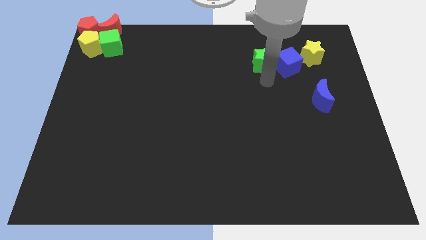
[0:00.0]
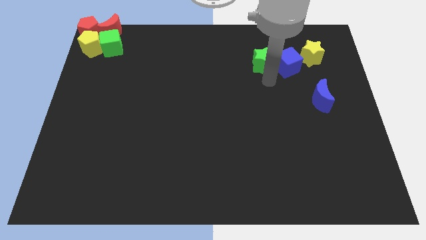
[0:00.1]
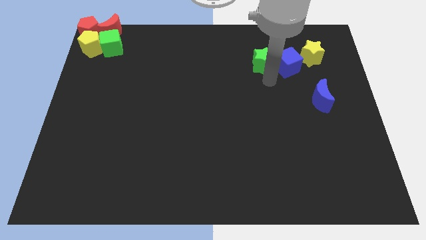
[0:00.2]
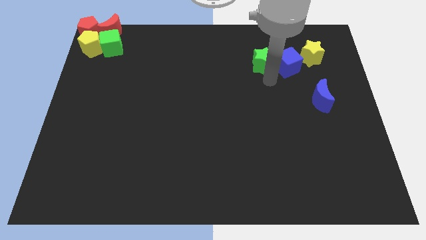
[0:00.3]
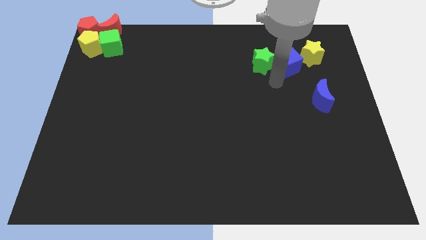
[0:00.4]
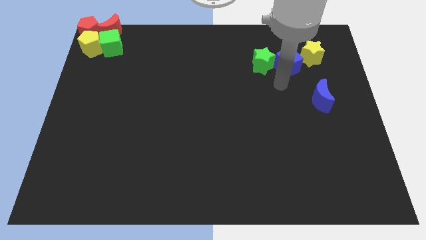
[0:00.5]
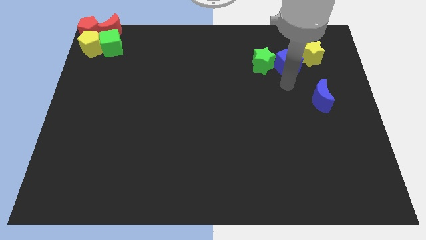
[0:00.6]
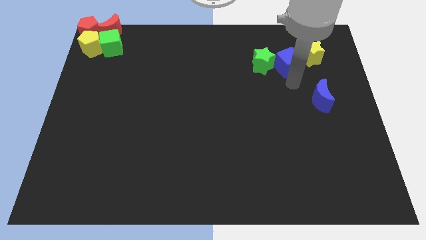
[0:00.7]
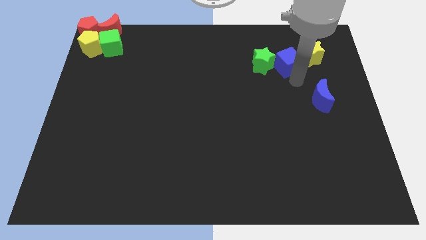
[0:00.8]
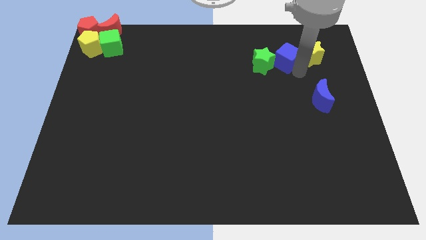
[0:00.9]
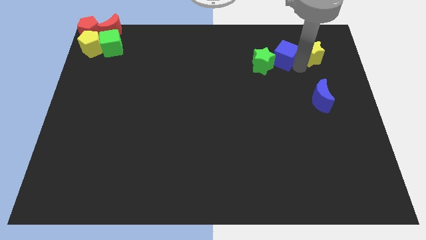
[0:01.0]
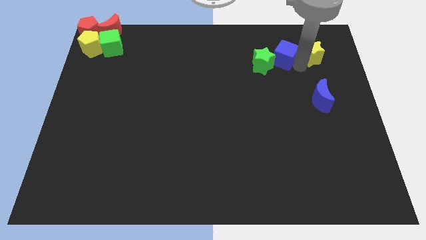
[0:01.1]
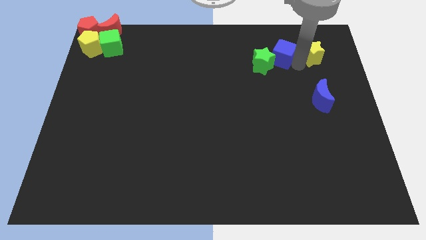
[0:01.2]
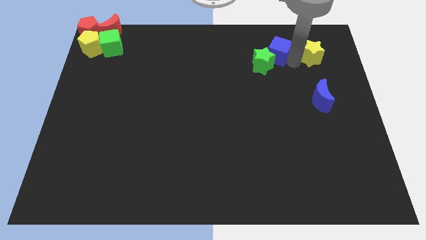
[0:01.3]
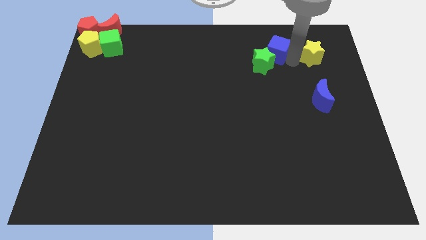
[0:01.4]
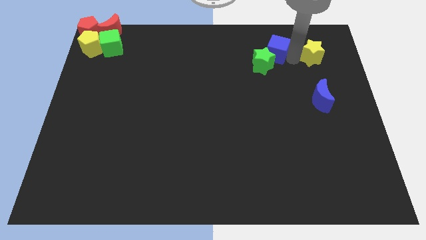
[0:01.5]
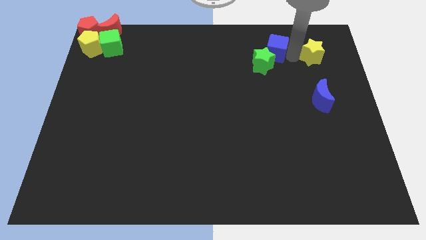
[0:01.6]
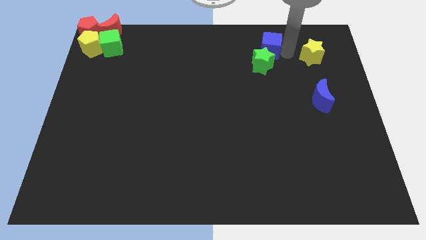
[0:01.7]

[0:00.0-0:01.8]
push the blue cube slightly towards upside

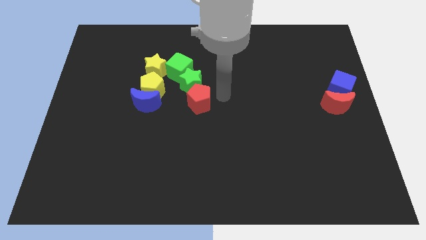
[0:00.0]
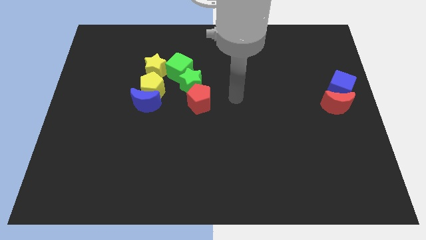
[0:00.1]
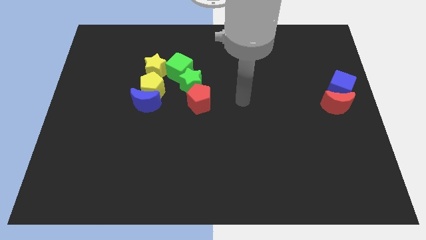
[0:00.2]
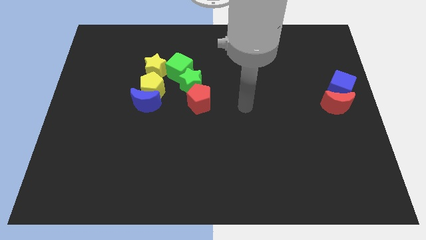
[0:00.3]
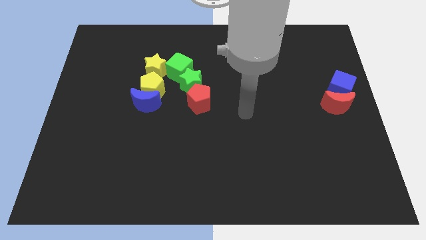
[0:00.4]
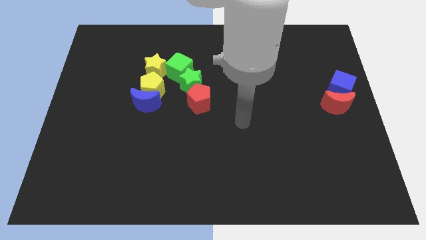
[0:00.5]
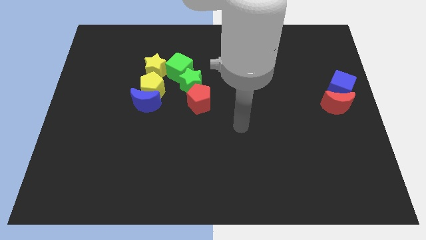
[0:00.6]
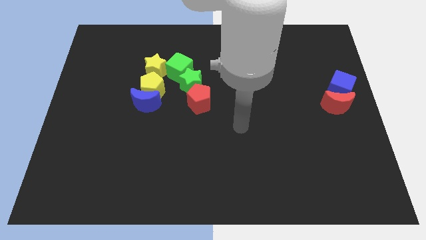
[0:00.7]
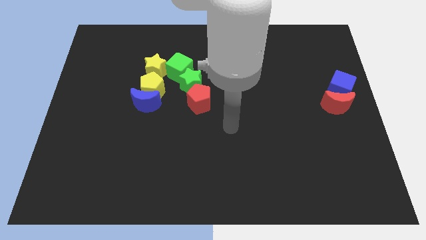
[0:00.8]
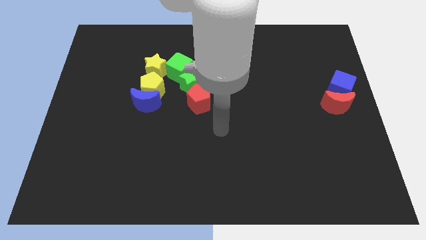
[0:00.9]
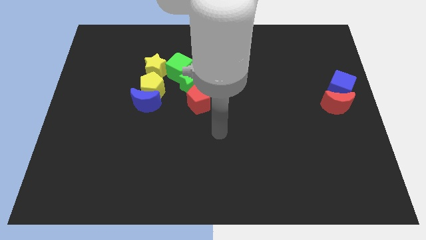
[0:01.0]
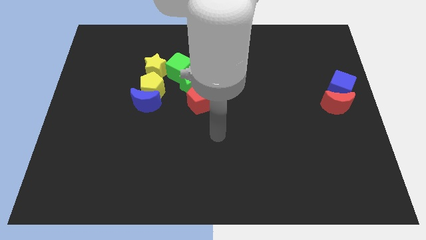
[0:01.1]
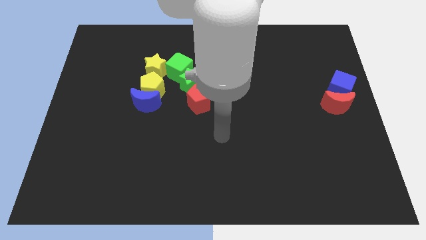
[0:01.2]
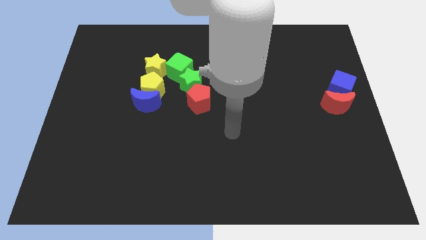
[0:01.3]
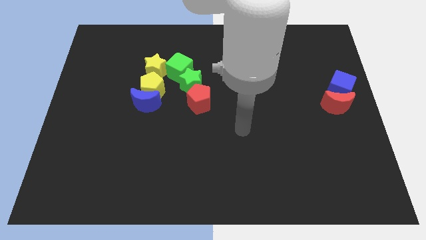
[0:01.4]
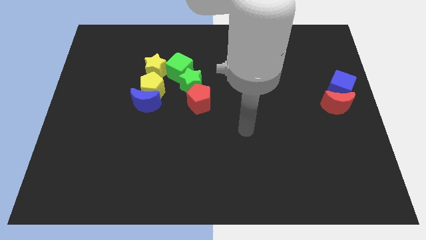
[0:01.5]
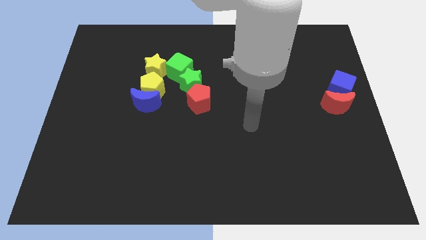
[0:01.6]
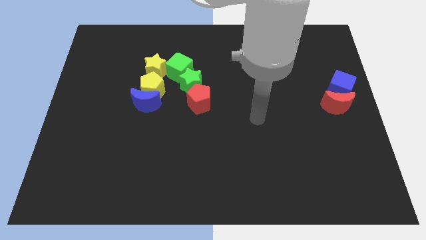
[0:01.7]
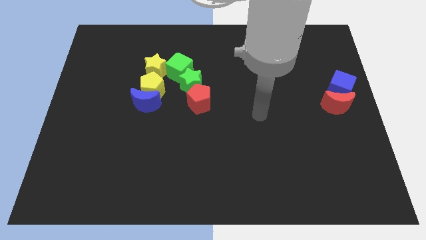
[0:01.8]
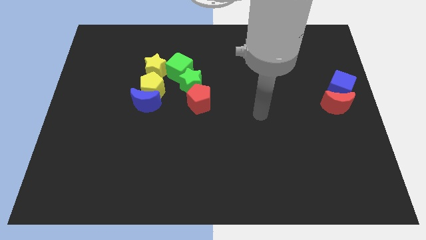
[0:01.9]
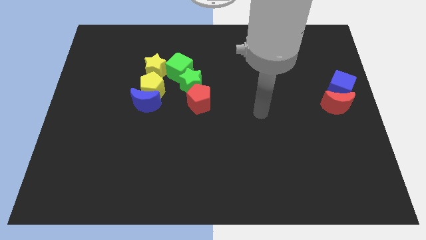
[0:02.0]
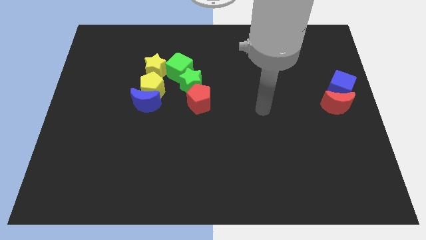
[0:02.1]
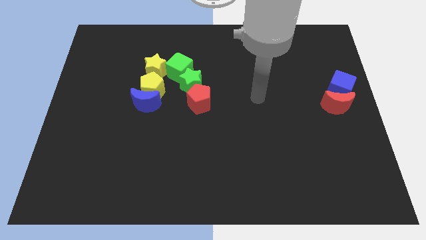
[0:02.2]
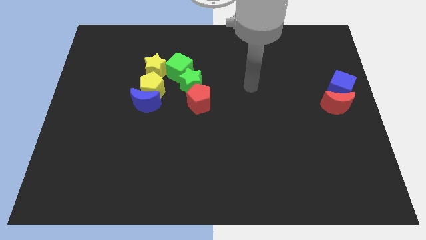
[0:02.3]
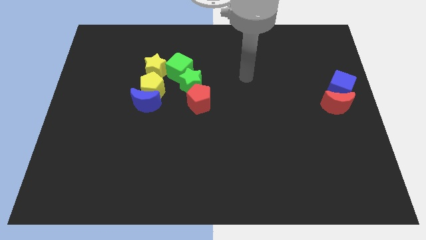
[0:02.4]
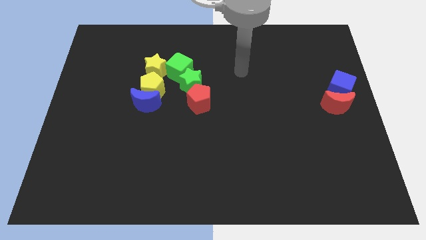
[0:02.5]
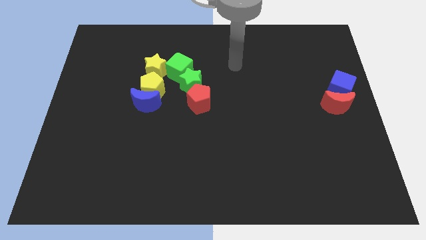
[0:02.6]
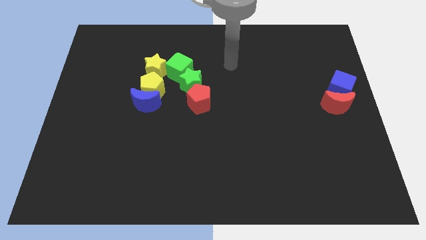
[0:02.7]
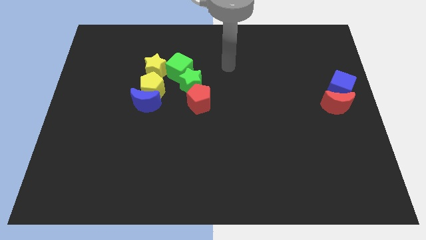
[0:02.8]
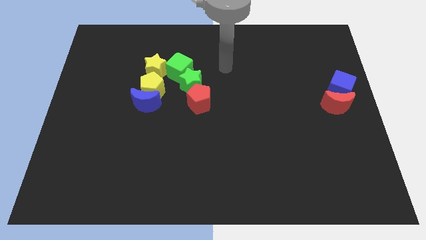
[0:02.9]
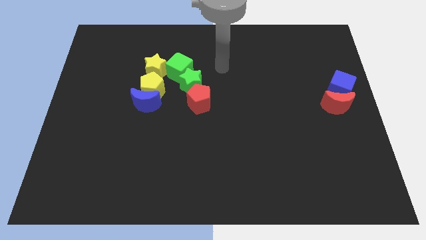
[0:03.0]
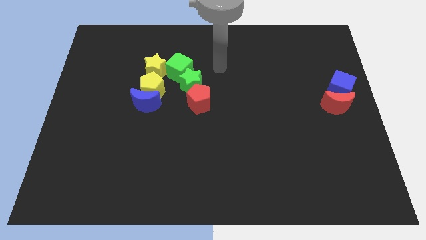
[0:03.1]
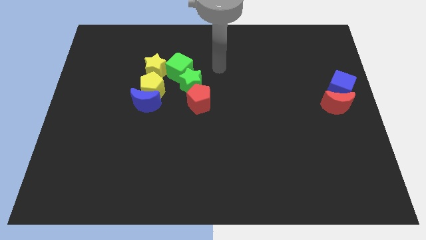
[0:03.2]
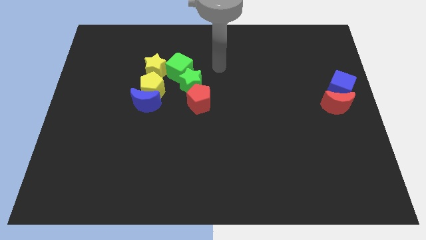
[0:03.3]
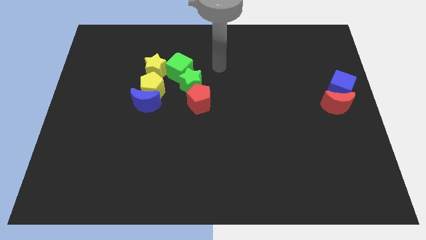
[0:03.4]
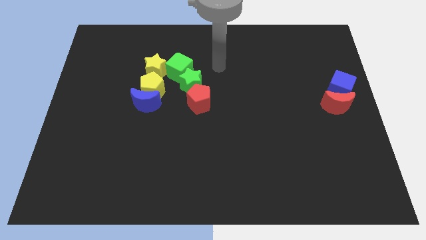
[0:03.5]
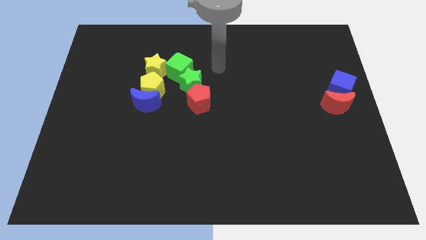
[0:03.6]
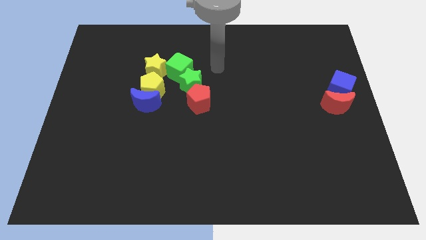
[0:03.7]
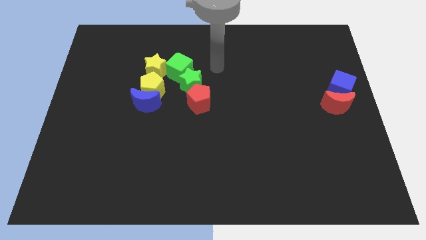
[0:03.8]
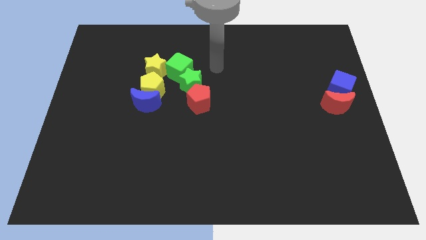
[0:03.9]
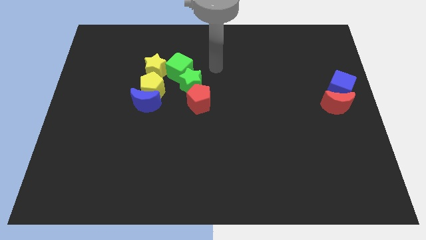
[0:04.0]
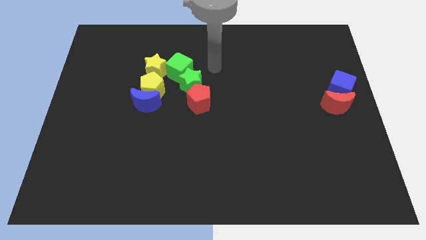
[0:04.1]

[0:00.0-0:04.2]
place your arm at the right side of the green cube

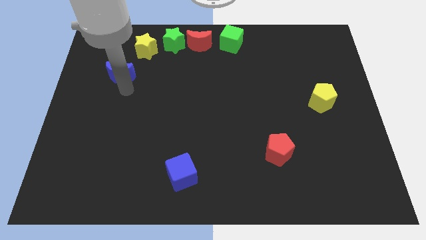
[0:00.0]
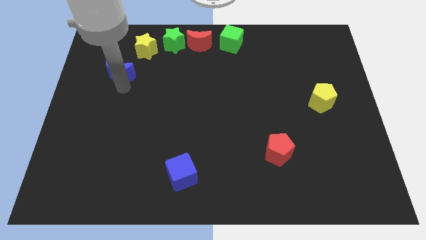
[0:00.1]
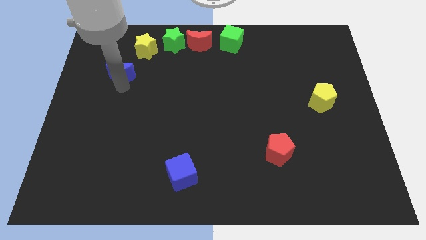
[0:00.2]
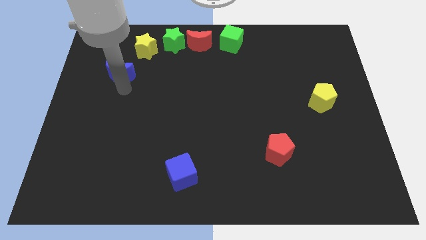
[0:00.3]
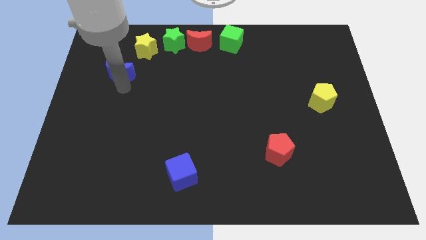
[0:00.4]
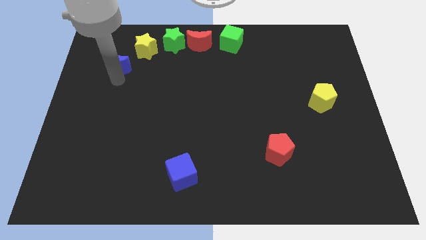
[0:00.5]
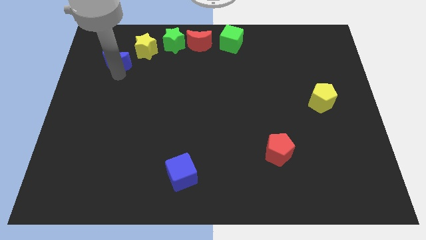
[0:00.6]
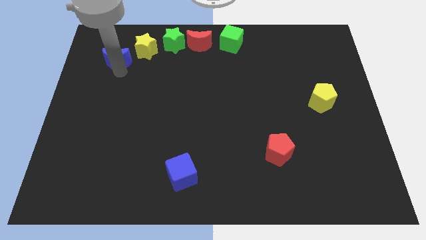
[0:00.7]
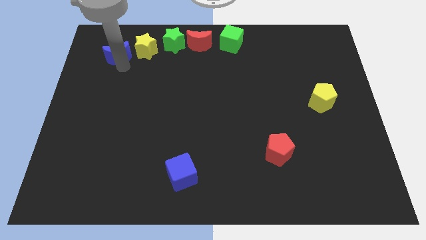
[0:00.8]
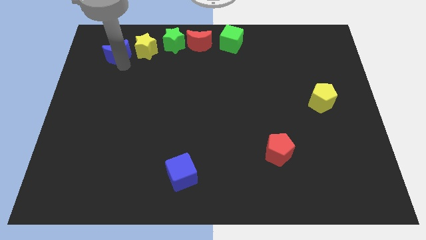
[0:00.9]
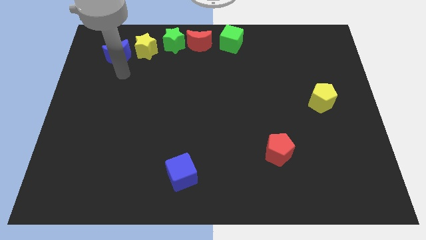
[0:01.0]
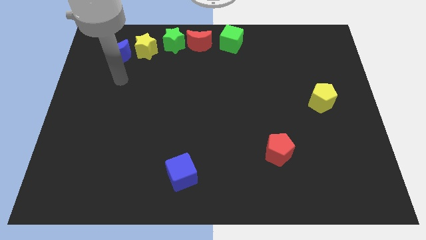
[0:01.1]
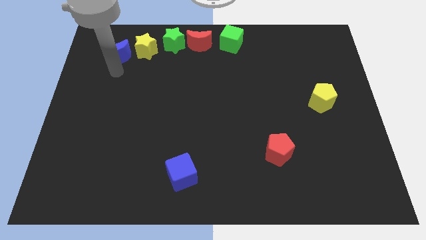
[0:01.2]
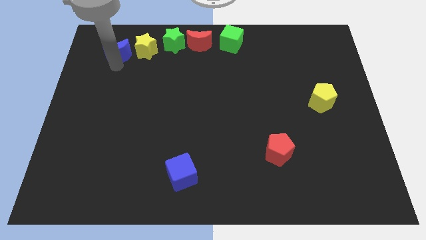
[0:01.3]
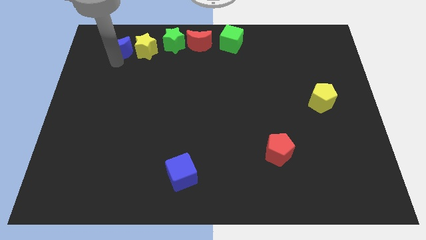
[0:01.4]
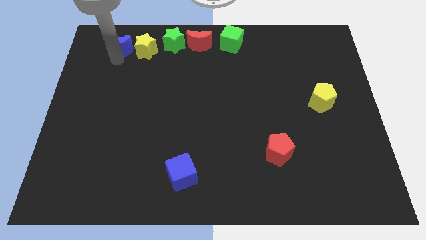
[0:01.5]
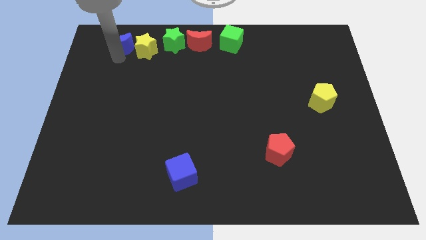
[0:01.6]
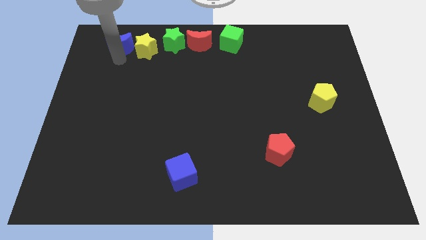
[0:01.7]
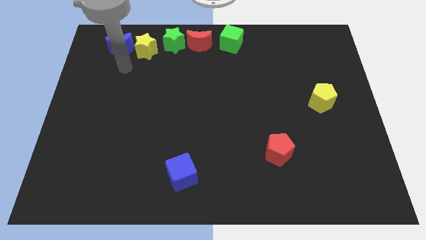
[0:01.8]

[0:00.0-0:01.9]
move the blue moon to the left side of the yellow star

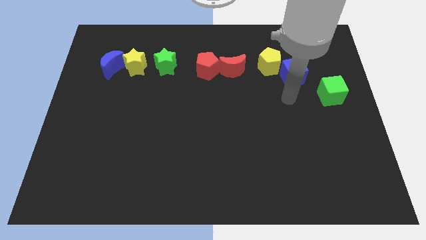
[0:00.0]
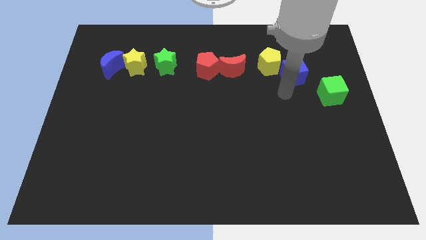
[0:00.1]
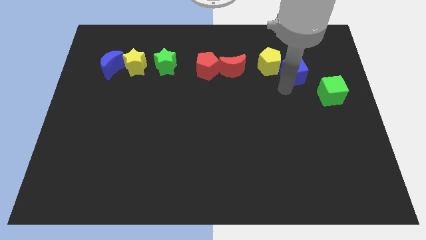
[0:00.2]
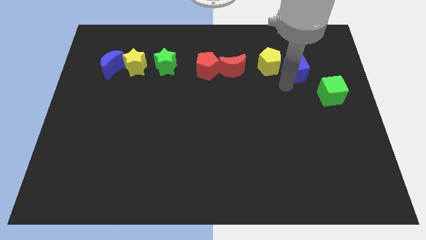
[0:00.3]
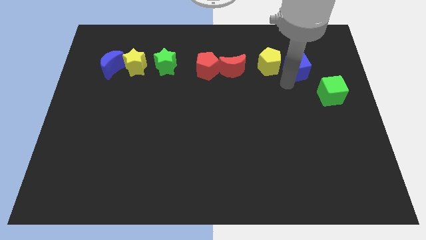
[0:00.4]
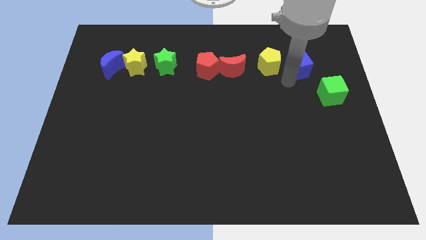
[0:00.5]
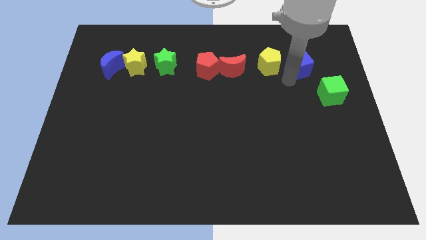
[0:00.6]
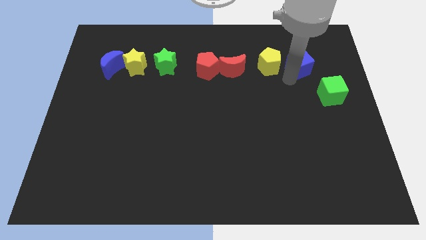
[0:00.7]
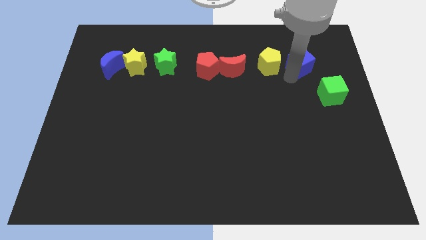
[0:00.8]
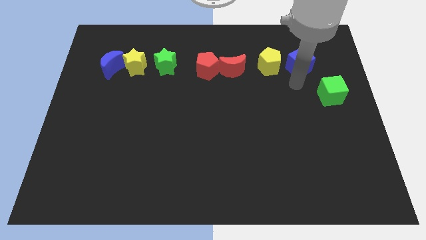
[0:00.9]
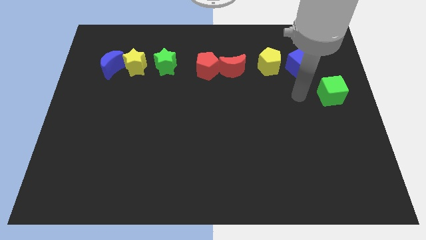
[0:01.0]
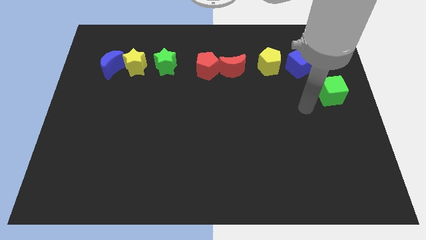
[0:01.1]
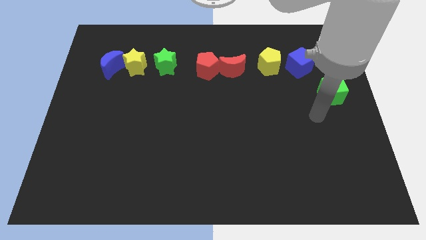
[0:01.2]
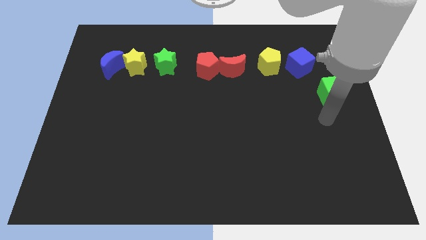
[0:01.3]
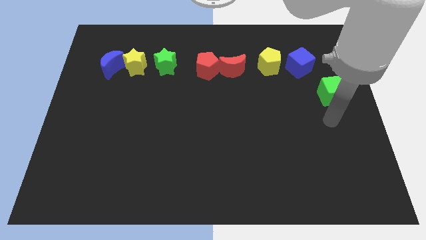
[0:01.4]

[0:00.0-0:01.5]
move the blue cube towards up a little
